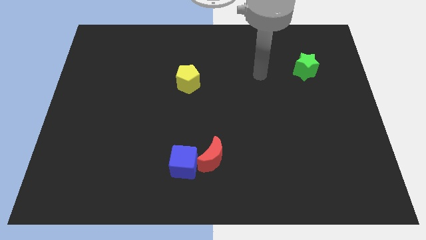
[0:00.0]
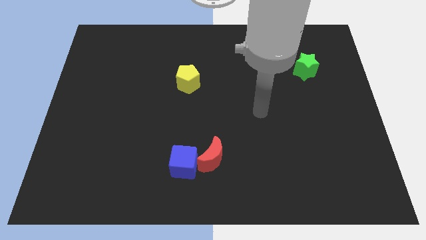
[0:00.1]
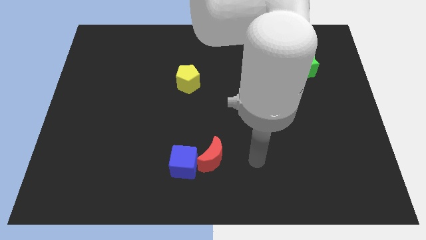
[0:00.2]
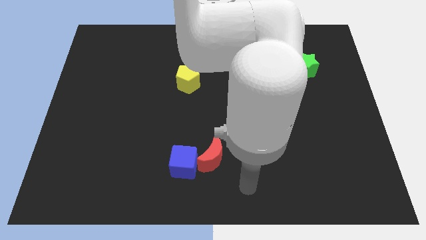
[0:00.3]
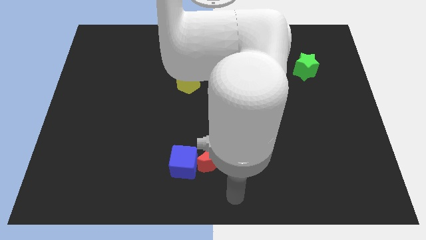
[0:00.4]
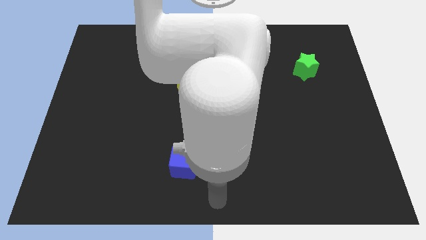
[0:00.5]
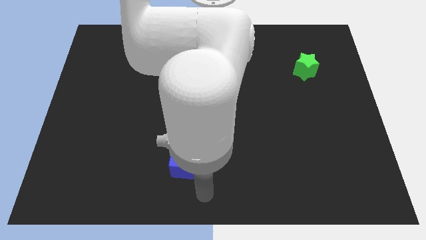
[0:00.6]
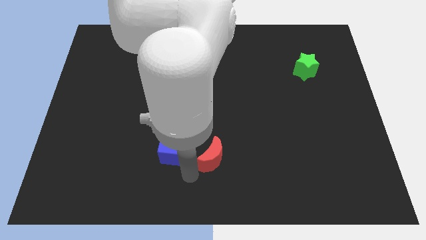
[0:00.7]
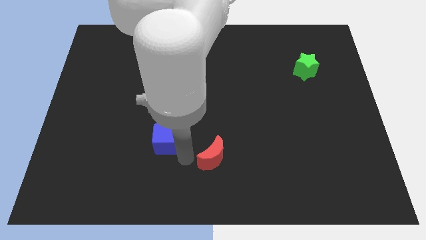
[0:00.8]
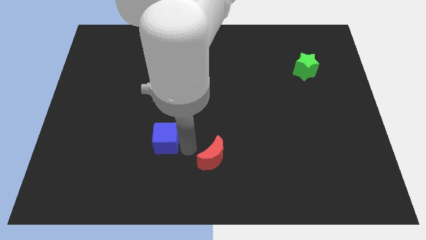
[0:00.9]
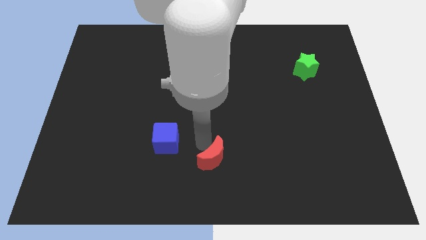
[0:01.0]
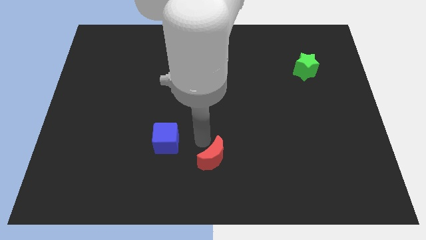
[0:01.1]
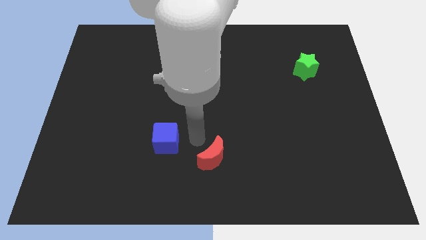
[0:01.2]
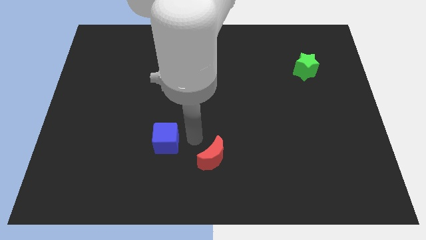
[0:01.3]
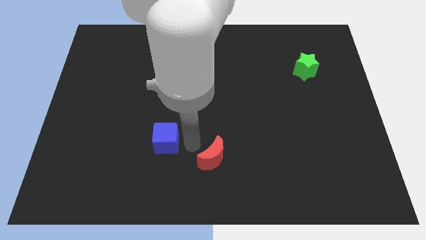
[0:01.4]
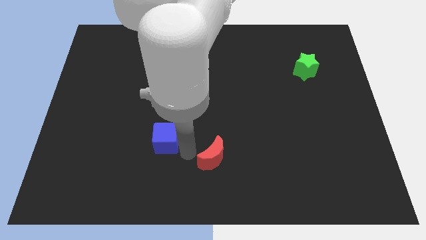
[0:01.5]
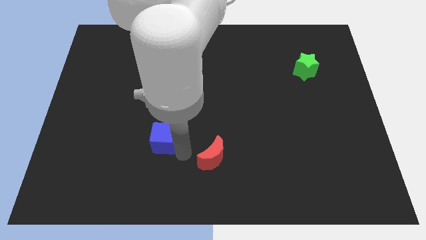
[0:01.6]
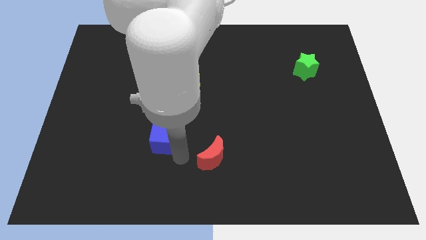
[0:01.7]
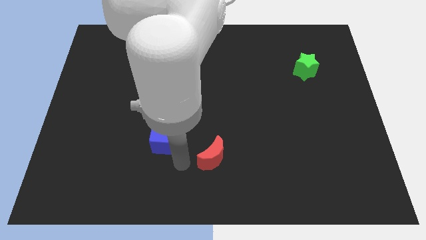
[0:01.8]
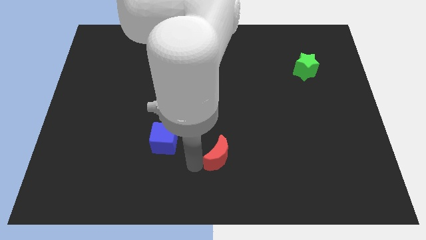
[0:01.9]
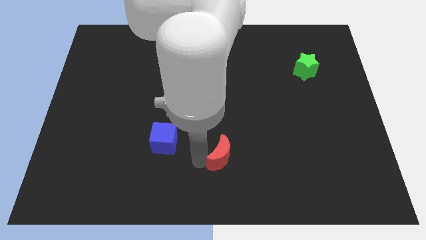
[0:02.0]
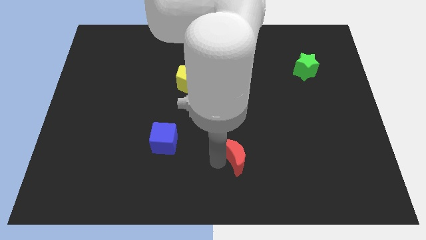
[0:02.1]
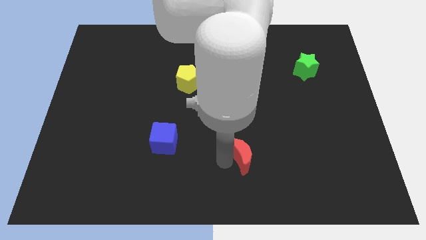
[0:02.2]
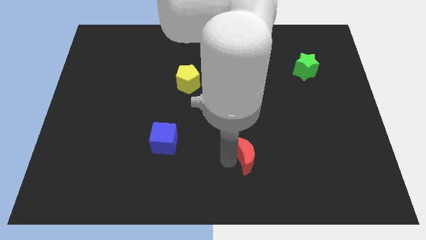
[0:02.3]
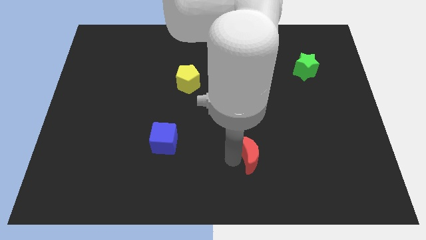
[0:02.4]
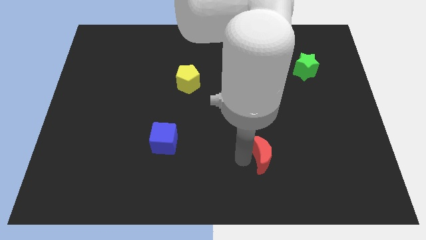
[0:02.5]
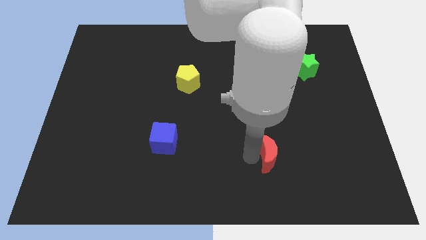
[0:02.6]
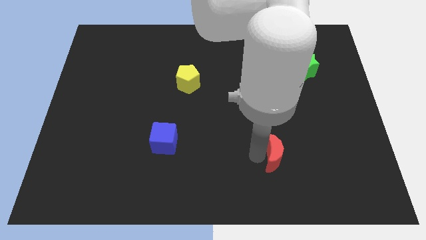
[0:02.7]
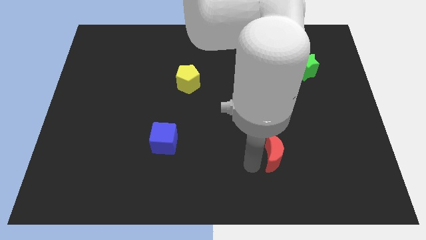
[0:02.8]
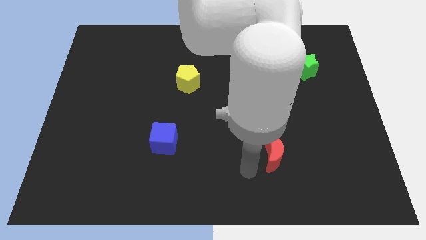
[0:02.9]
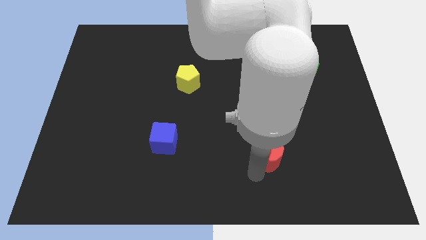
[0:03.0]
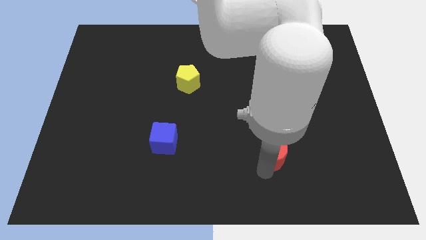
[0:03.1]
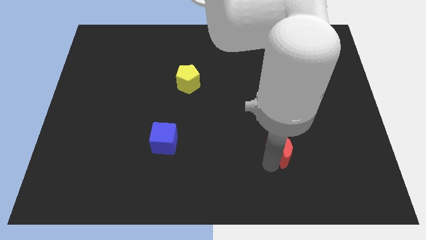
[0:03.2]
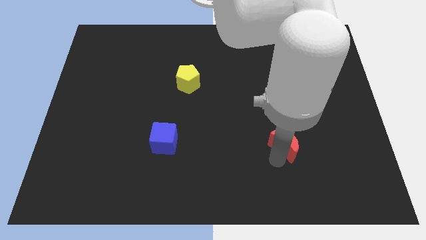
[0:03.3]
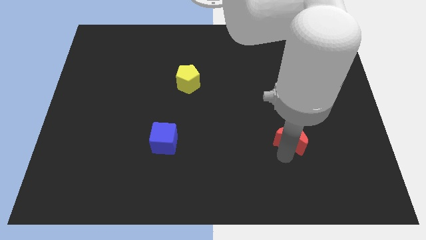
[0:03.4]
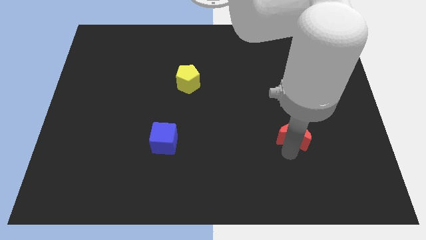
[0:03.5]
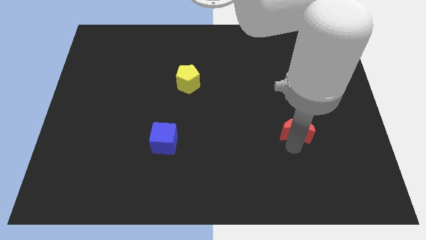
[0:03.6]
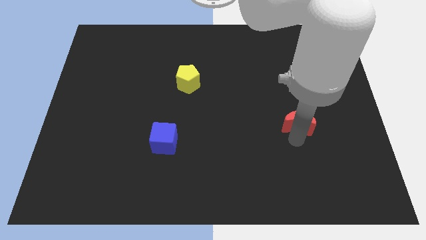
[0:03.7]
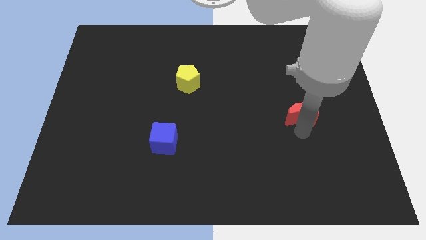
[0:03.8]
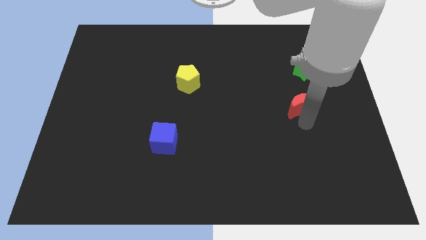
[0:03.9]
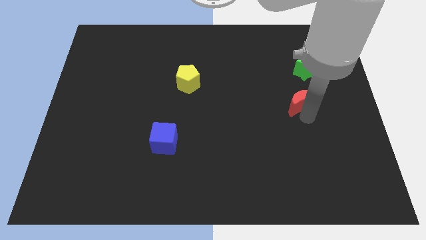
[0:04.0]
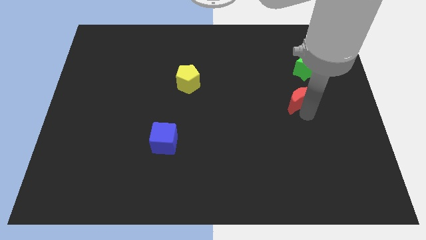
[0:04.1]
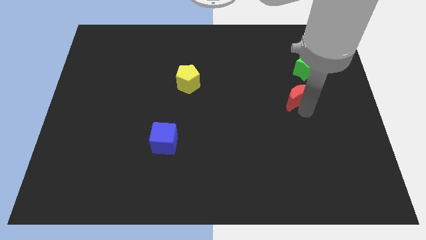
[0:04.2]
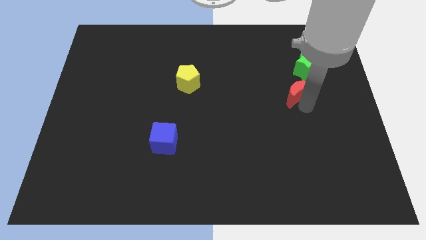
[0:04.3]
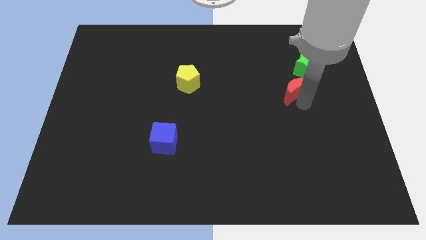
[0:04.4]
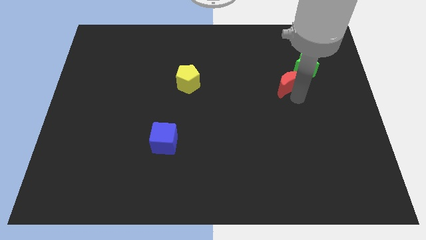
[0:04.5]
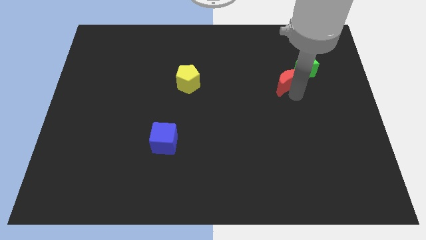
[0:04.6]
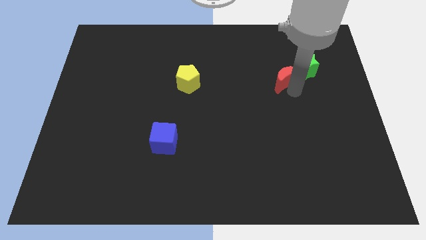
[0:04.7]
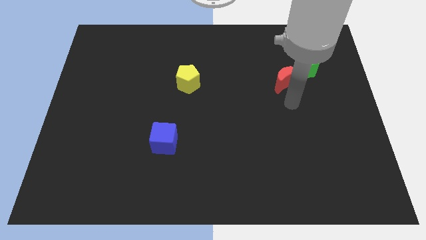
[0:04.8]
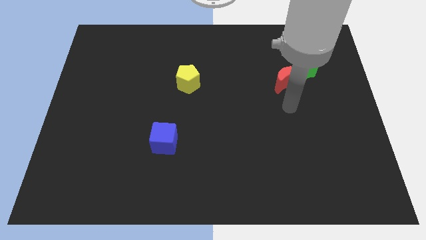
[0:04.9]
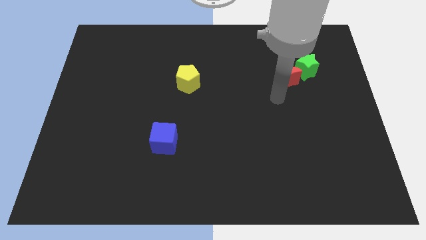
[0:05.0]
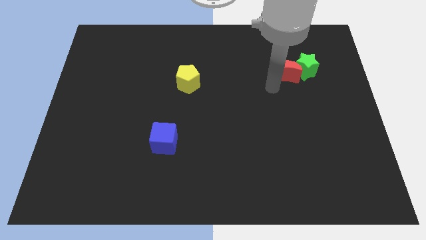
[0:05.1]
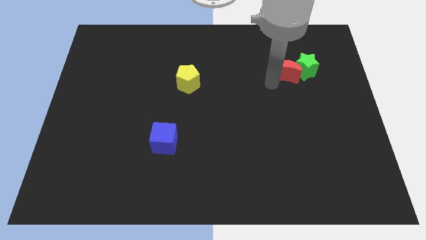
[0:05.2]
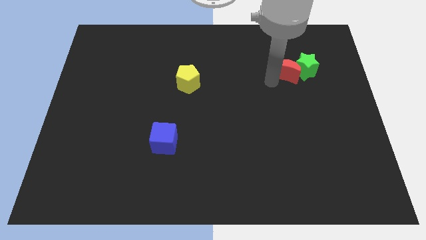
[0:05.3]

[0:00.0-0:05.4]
slide the moon next to the green star

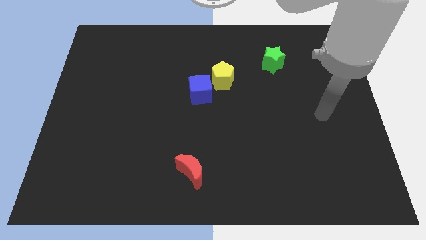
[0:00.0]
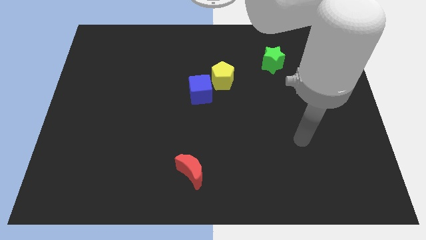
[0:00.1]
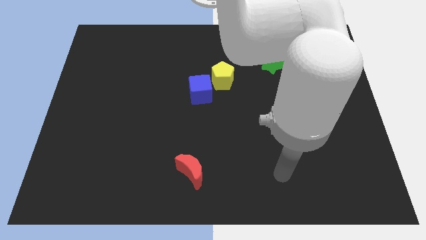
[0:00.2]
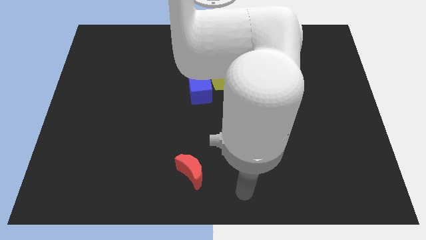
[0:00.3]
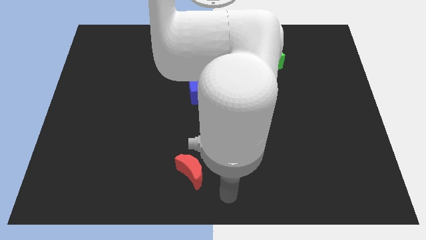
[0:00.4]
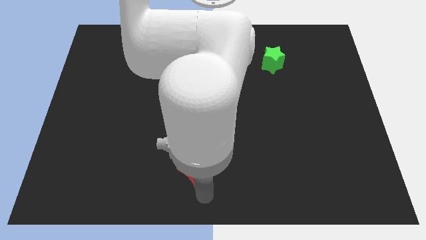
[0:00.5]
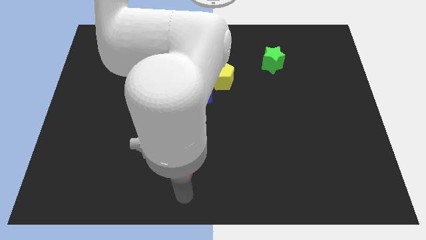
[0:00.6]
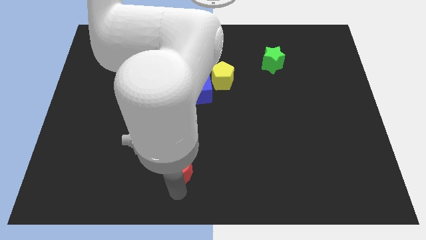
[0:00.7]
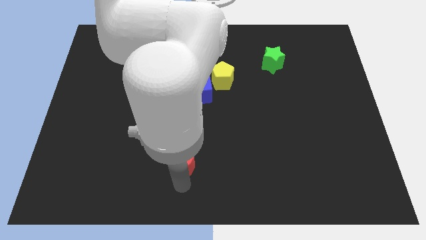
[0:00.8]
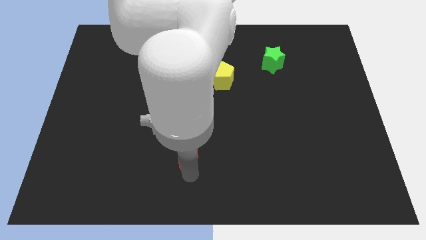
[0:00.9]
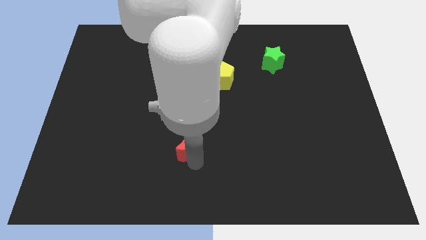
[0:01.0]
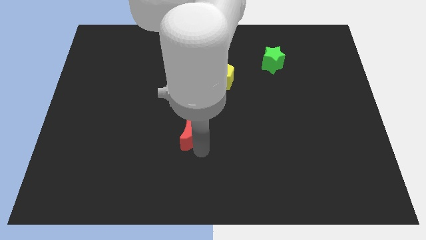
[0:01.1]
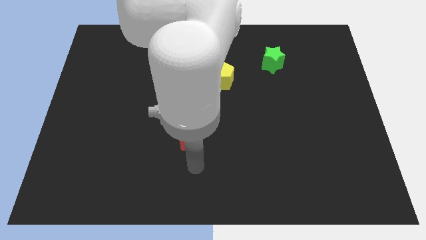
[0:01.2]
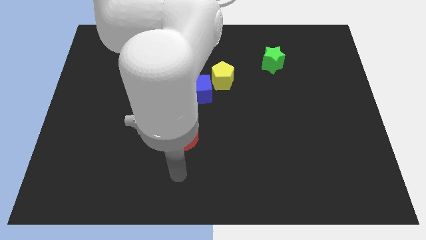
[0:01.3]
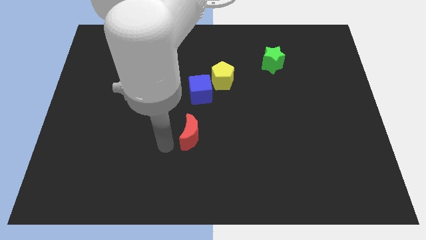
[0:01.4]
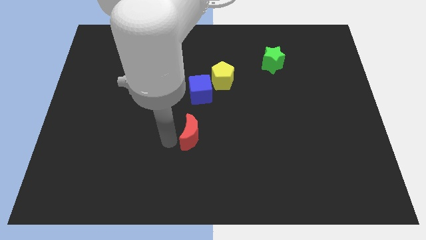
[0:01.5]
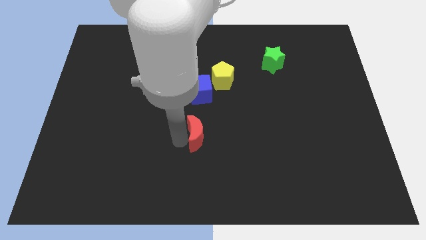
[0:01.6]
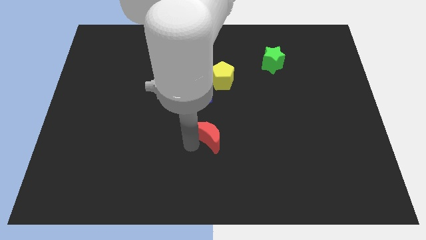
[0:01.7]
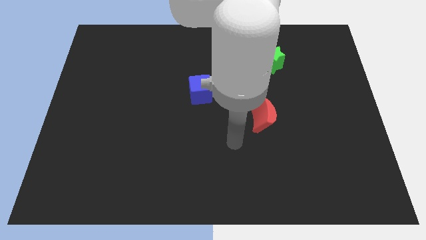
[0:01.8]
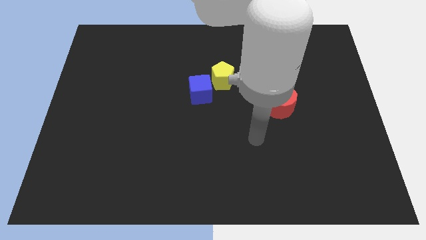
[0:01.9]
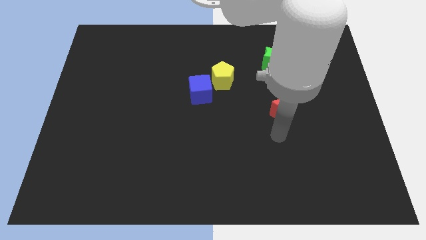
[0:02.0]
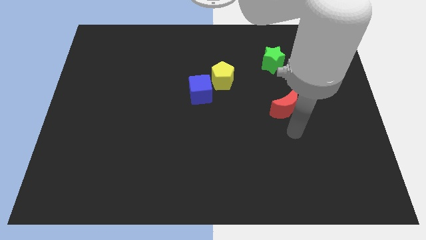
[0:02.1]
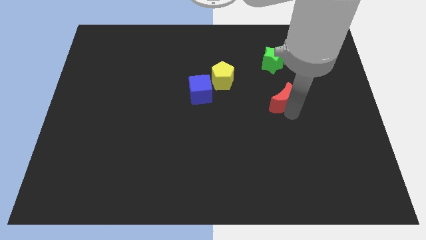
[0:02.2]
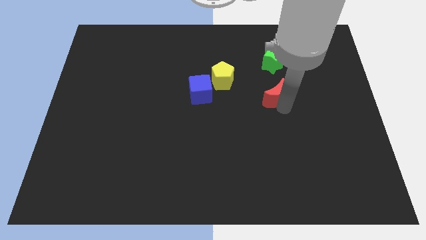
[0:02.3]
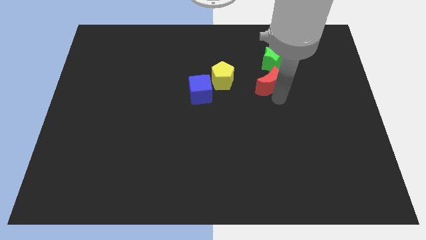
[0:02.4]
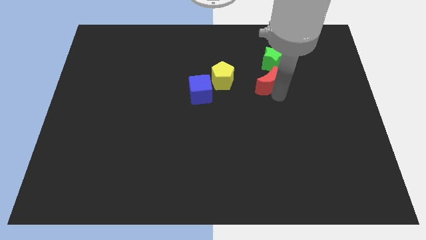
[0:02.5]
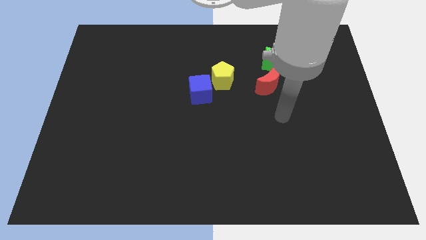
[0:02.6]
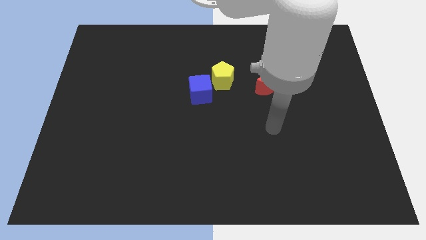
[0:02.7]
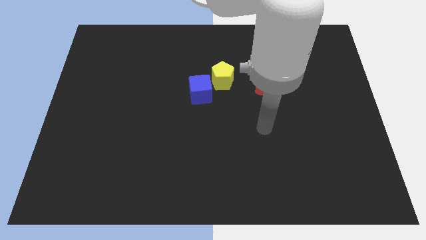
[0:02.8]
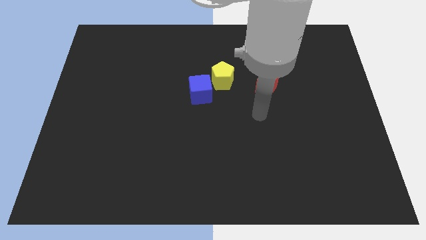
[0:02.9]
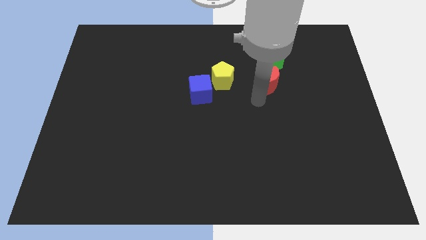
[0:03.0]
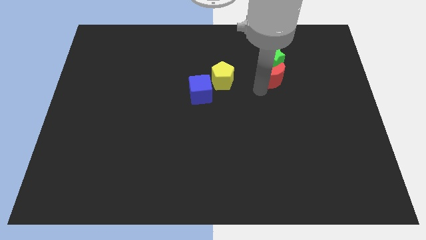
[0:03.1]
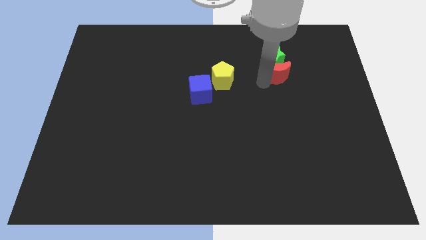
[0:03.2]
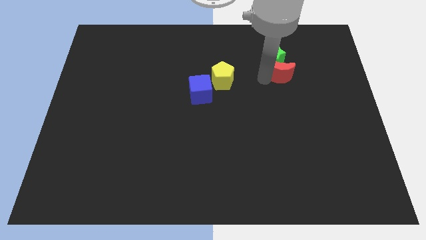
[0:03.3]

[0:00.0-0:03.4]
slide the red block close to the green block
